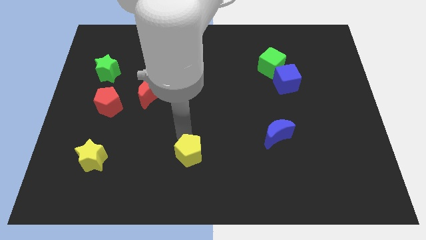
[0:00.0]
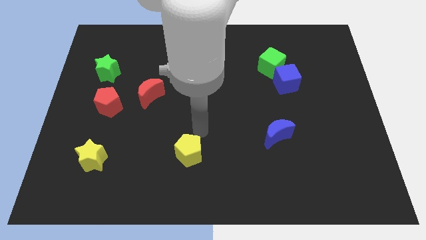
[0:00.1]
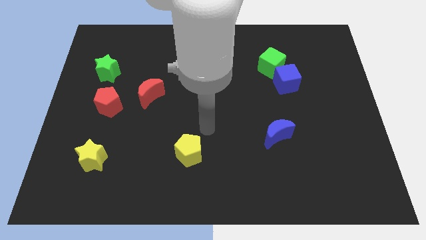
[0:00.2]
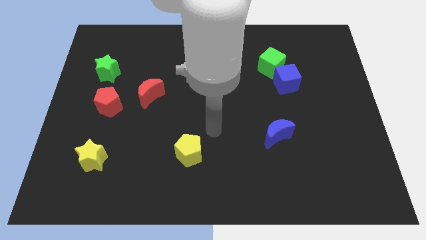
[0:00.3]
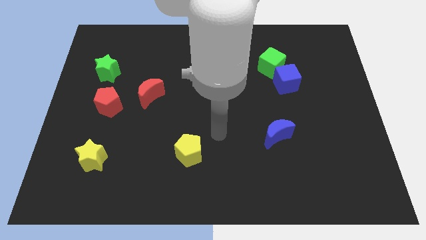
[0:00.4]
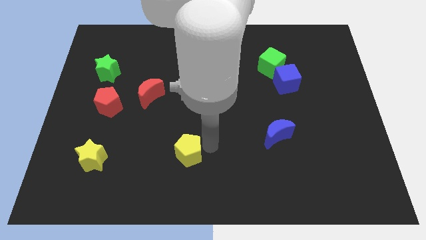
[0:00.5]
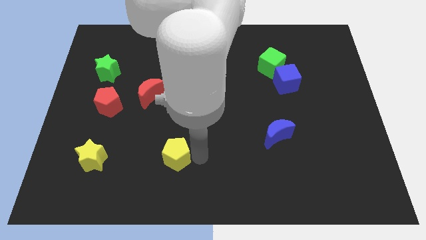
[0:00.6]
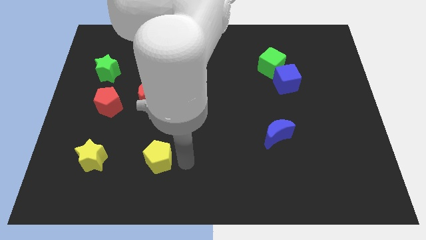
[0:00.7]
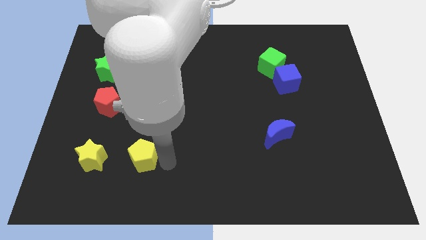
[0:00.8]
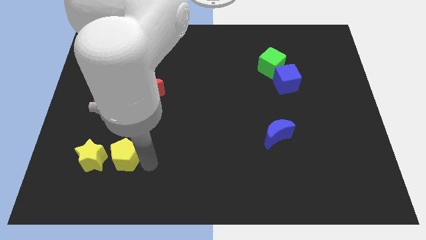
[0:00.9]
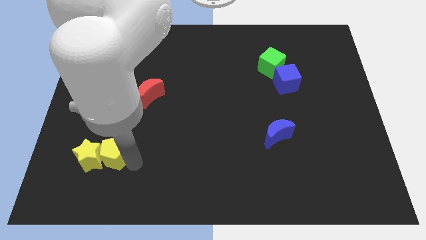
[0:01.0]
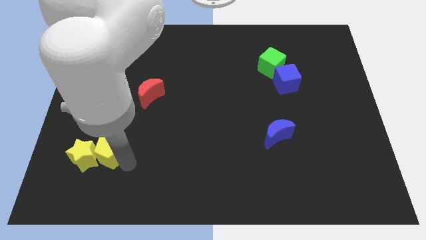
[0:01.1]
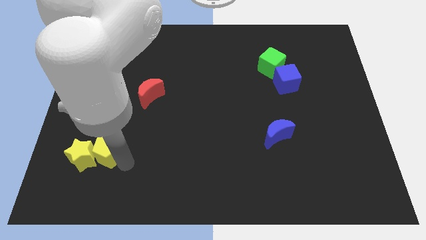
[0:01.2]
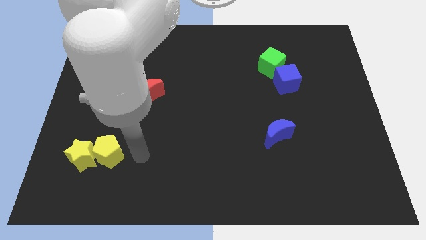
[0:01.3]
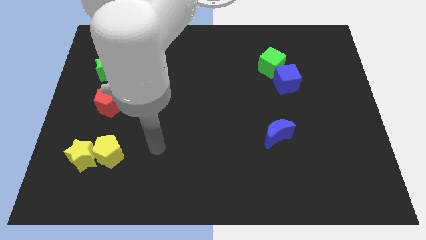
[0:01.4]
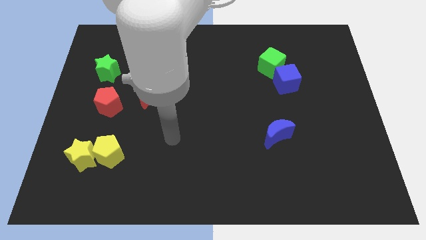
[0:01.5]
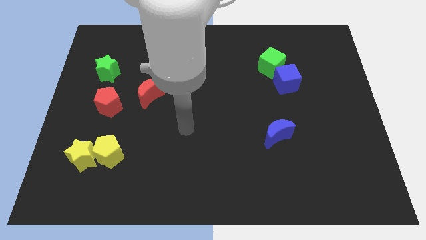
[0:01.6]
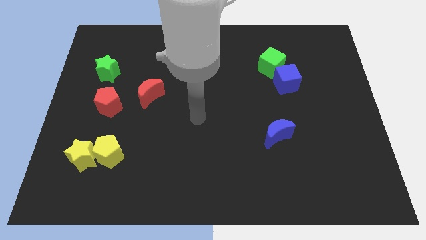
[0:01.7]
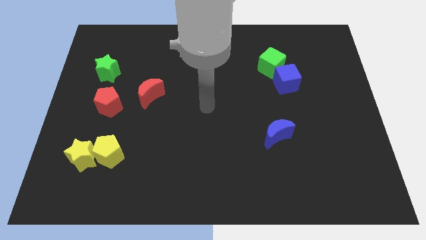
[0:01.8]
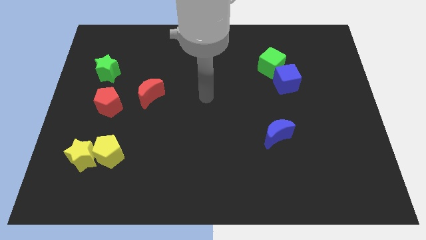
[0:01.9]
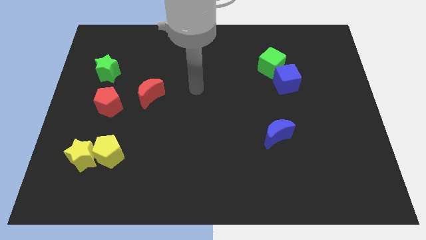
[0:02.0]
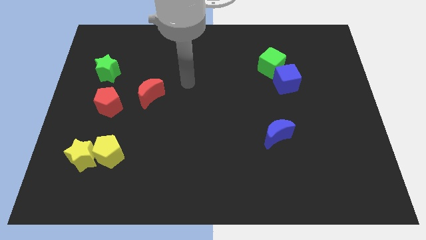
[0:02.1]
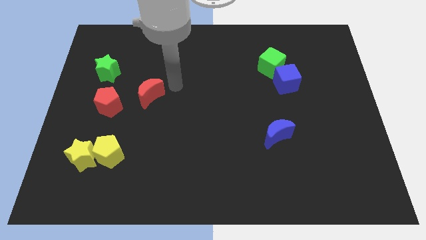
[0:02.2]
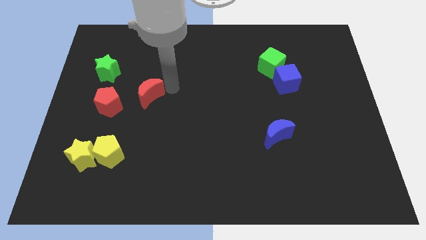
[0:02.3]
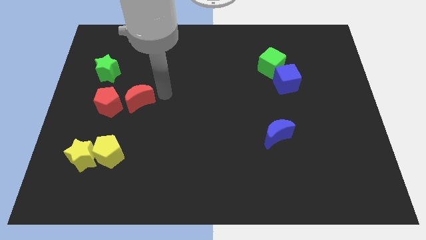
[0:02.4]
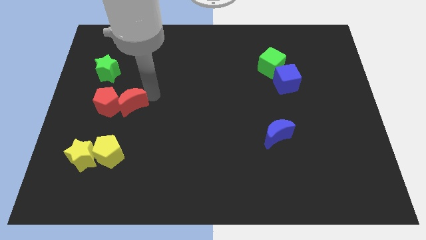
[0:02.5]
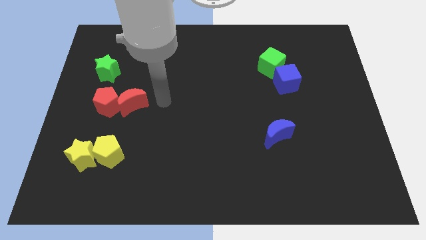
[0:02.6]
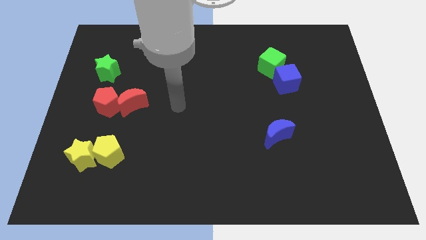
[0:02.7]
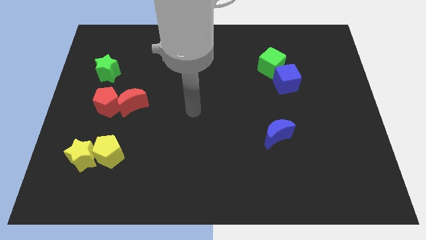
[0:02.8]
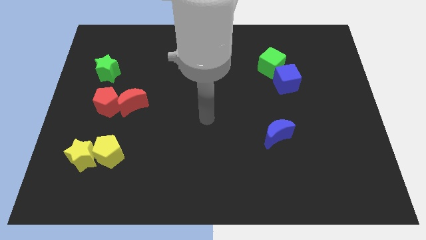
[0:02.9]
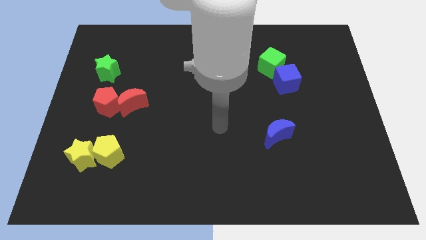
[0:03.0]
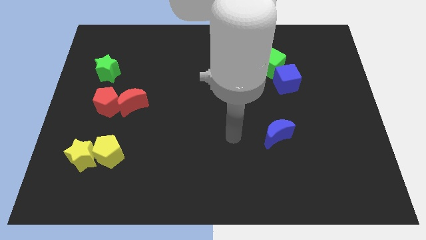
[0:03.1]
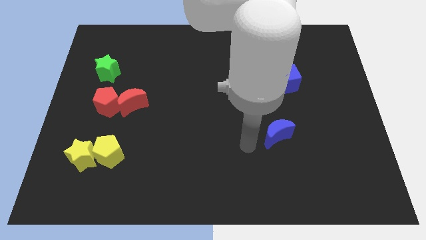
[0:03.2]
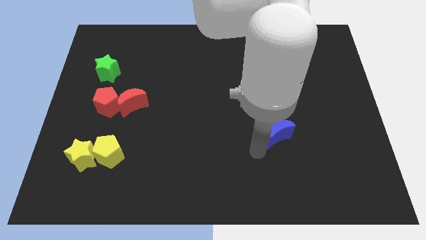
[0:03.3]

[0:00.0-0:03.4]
group up the yellow and red blocks diagonally

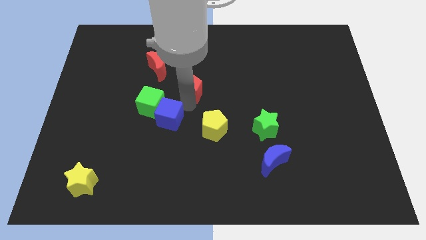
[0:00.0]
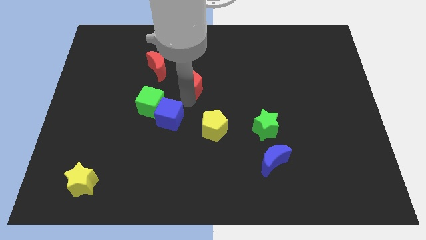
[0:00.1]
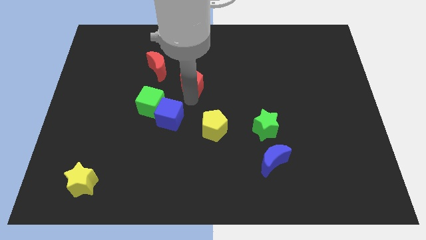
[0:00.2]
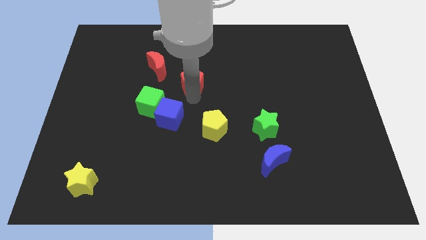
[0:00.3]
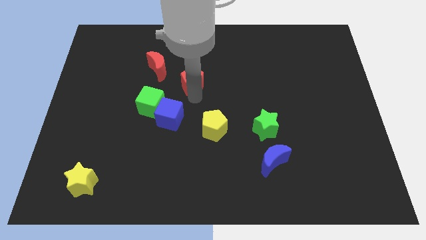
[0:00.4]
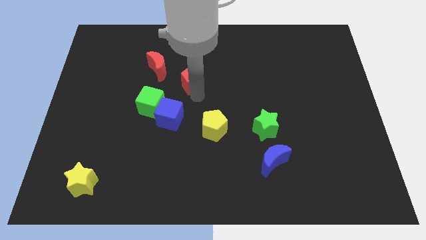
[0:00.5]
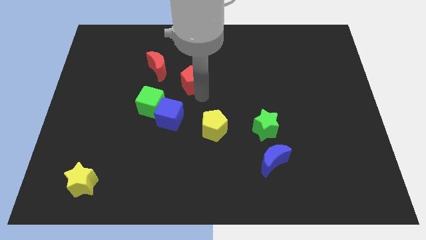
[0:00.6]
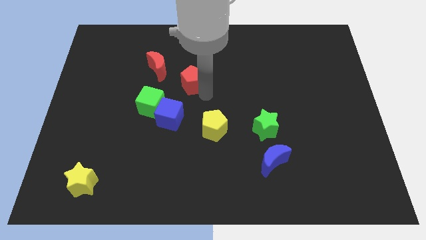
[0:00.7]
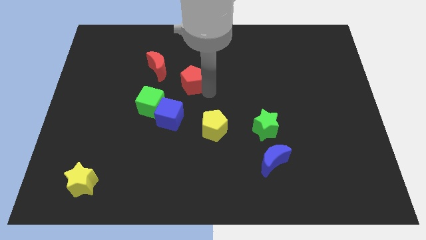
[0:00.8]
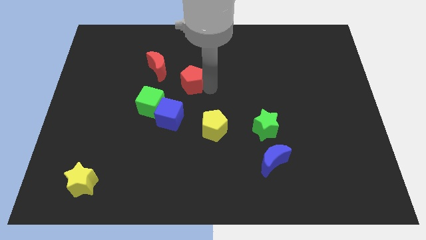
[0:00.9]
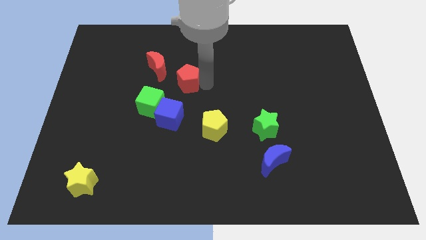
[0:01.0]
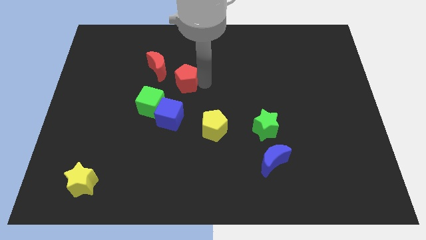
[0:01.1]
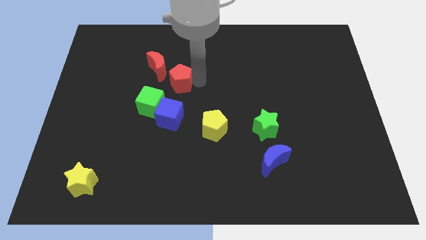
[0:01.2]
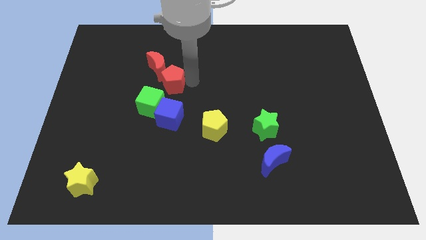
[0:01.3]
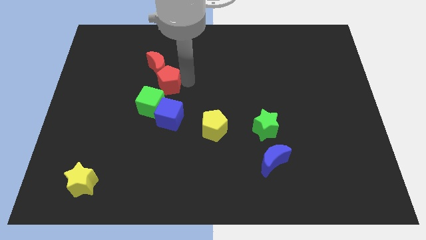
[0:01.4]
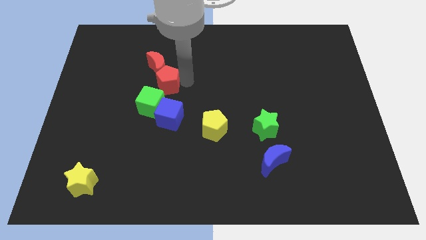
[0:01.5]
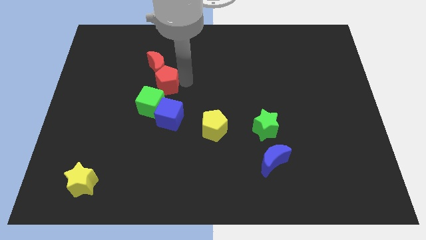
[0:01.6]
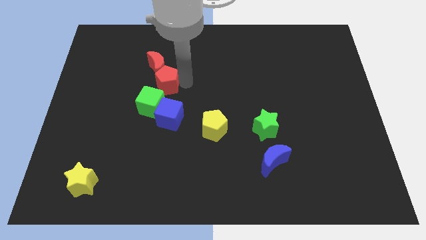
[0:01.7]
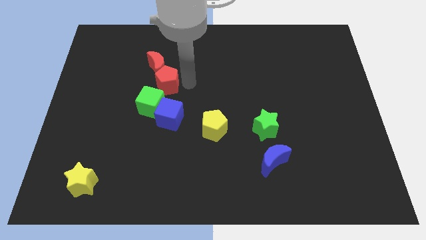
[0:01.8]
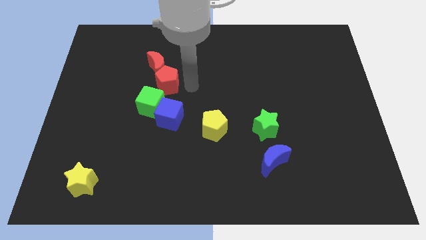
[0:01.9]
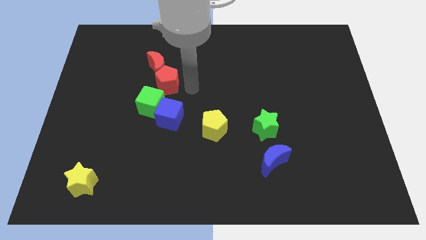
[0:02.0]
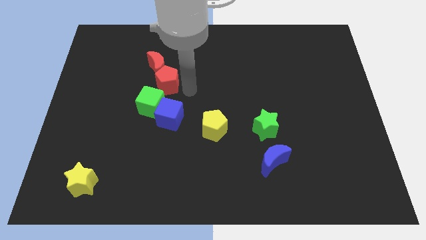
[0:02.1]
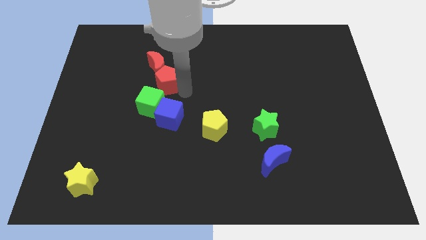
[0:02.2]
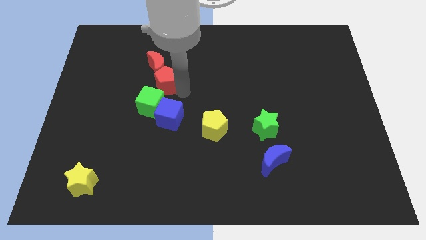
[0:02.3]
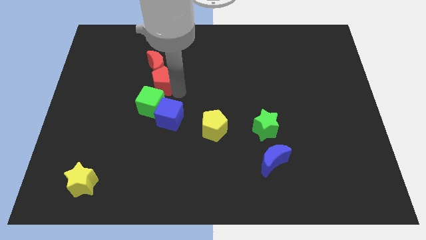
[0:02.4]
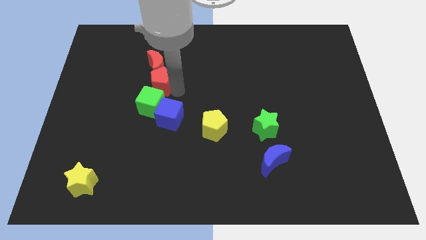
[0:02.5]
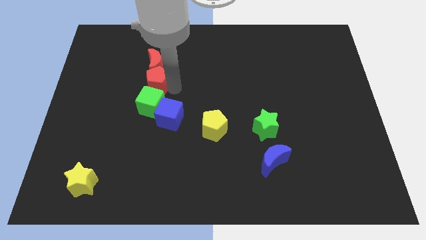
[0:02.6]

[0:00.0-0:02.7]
push the red pentagon into red crescent

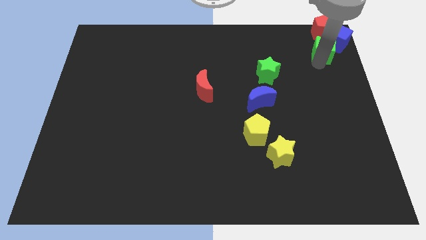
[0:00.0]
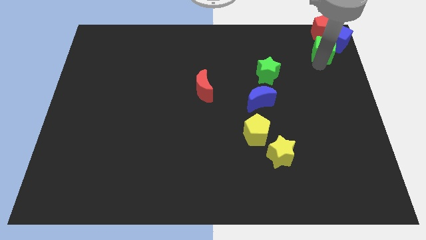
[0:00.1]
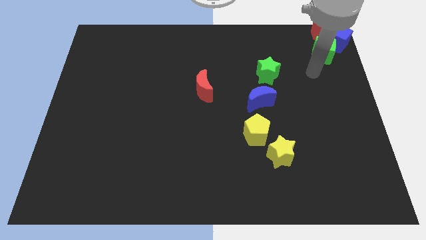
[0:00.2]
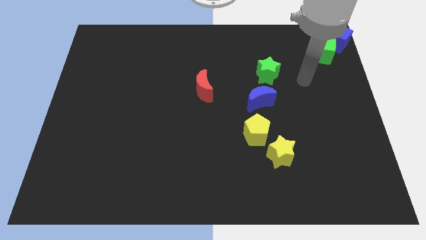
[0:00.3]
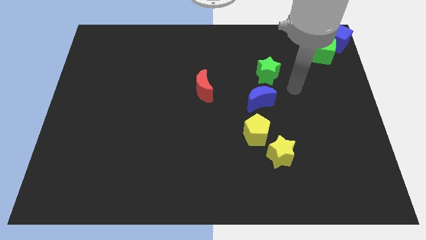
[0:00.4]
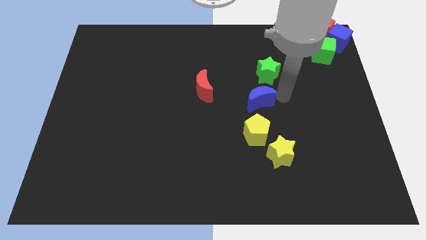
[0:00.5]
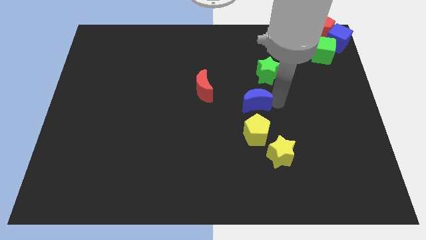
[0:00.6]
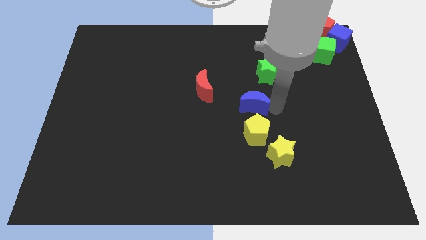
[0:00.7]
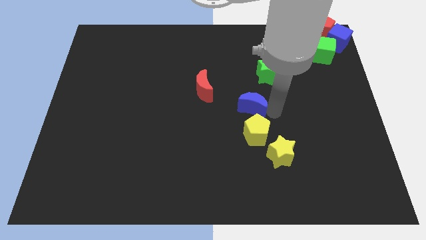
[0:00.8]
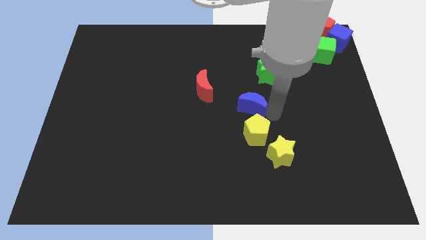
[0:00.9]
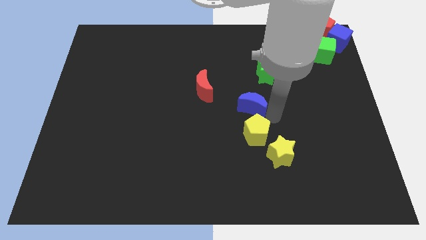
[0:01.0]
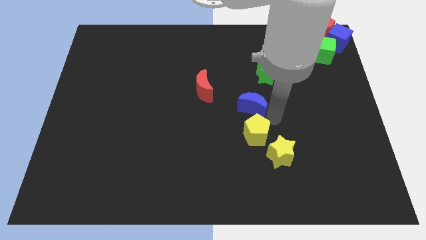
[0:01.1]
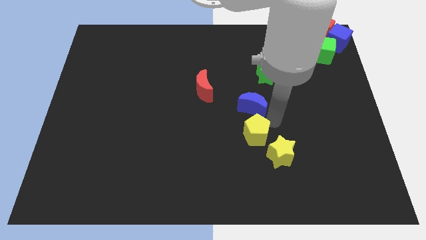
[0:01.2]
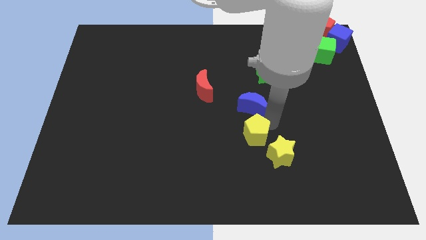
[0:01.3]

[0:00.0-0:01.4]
move your arm away from the green cube

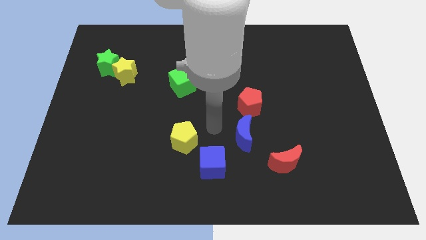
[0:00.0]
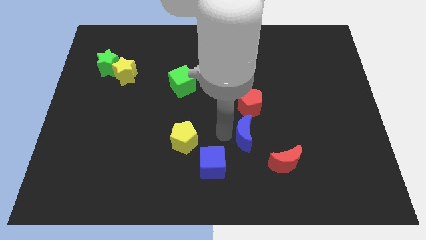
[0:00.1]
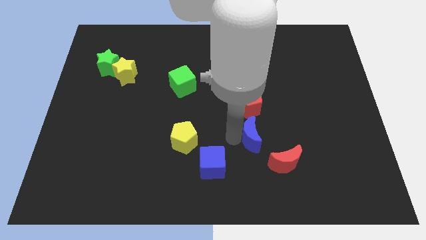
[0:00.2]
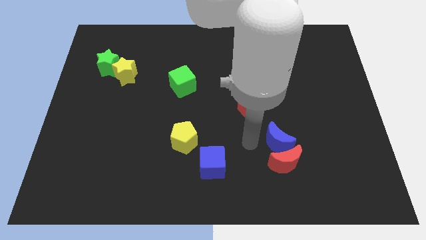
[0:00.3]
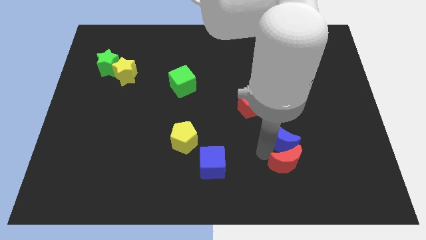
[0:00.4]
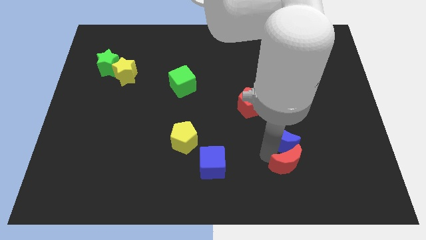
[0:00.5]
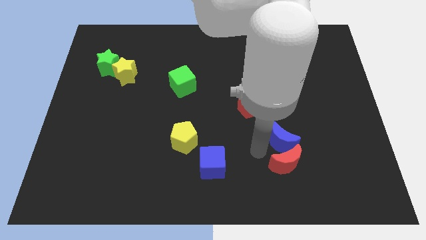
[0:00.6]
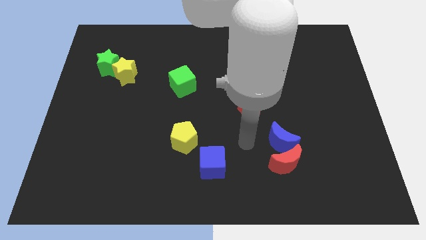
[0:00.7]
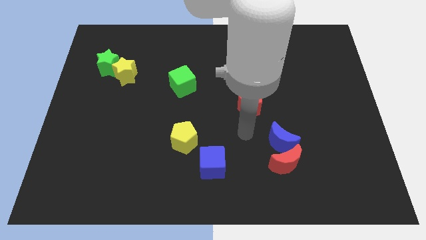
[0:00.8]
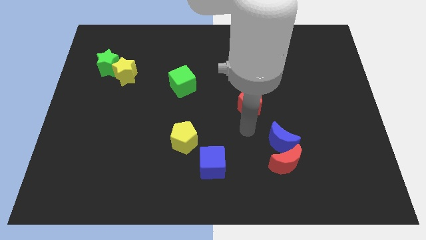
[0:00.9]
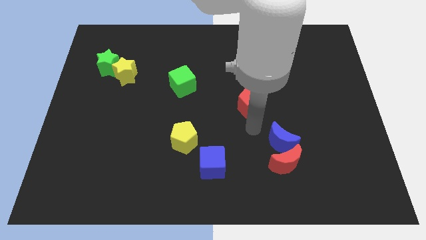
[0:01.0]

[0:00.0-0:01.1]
push the blue crescent into the red crescent

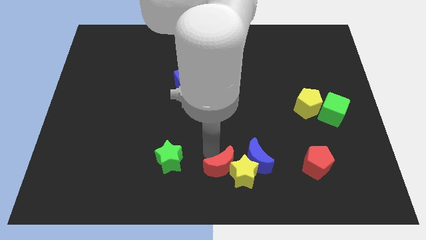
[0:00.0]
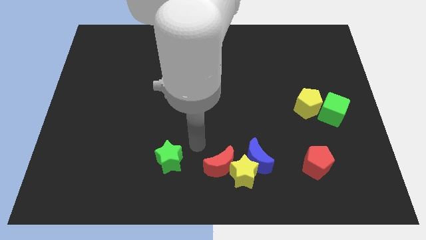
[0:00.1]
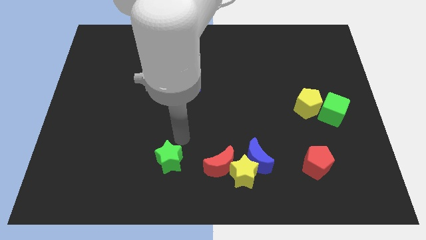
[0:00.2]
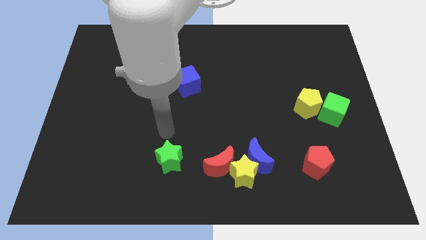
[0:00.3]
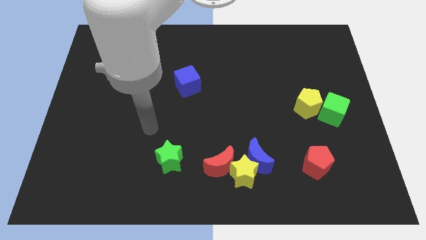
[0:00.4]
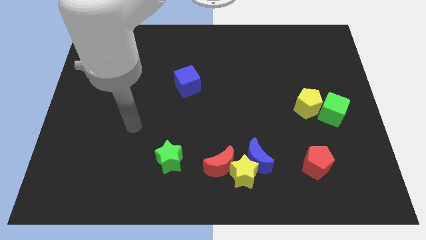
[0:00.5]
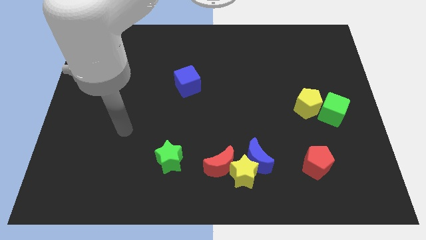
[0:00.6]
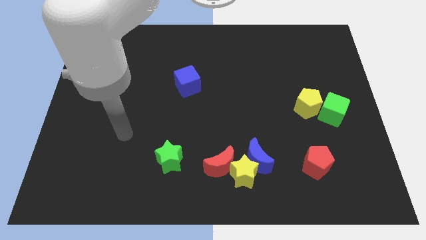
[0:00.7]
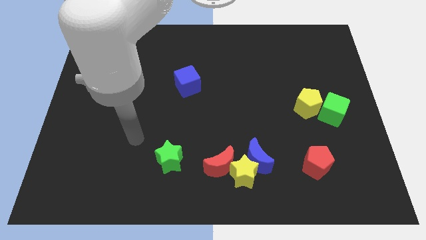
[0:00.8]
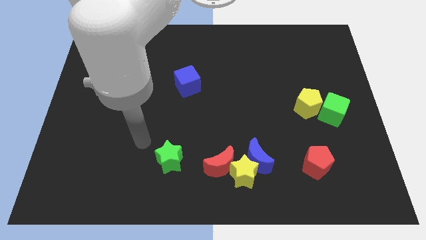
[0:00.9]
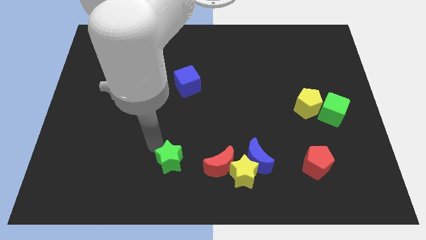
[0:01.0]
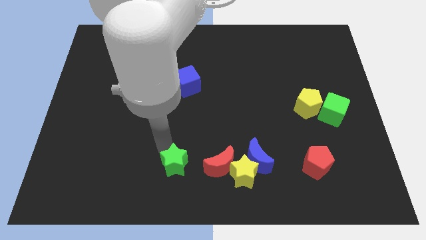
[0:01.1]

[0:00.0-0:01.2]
move the arm diagonally to the green star
